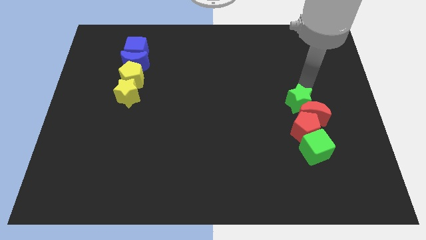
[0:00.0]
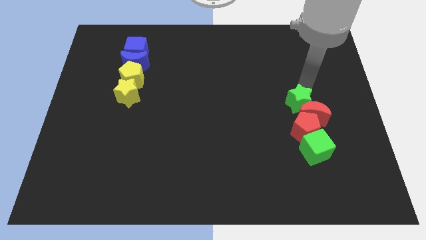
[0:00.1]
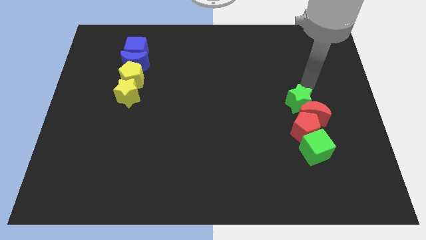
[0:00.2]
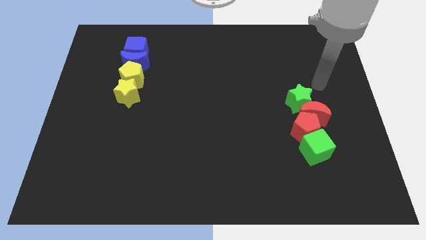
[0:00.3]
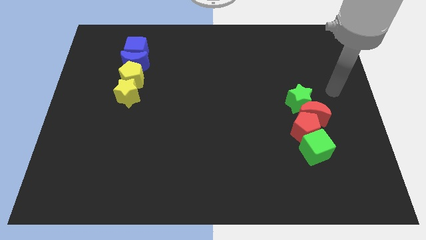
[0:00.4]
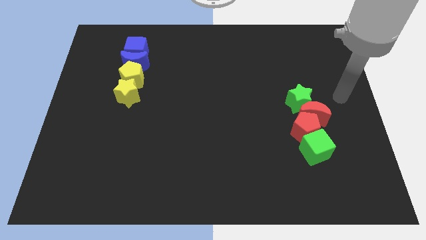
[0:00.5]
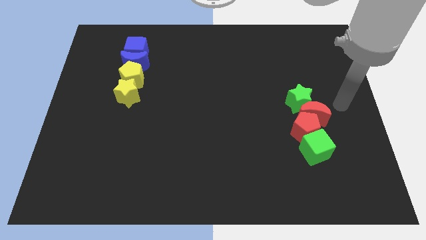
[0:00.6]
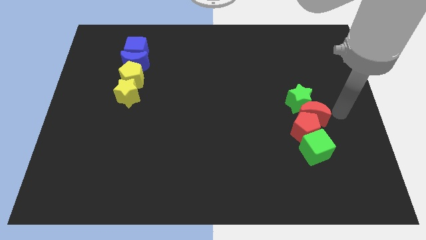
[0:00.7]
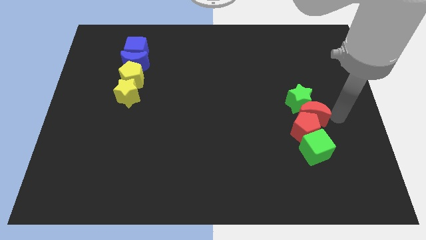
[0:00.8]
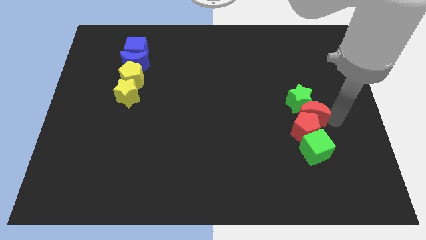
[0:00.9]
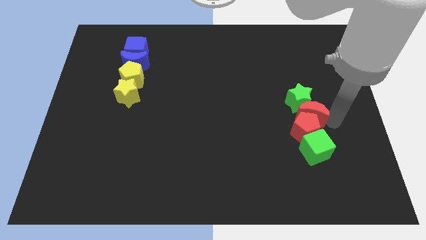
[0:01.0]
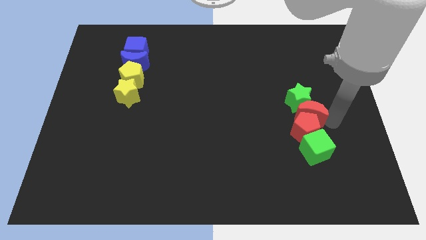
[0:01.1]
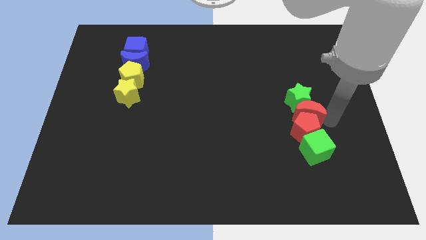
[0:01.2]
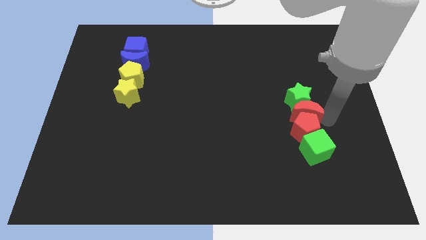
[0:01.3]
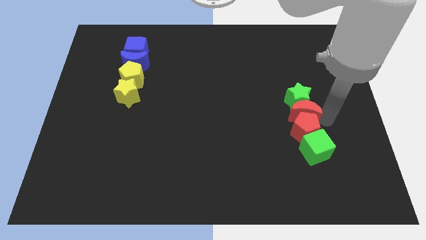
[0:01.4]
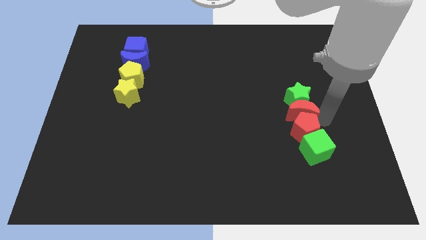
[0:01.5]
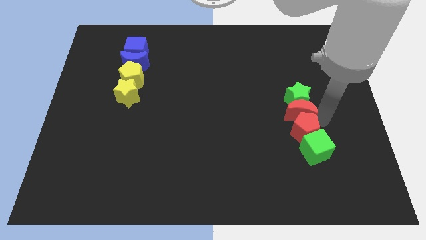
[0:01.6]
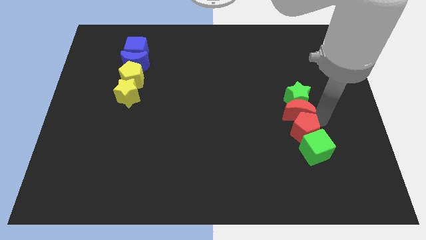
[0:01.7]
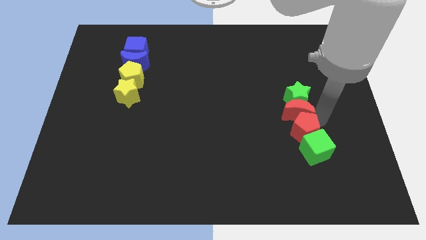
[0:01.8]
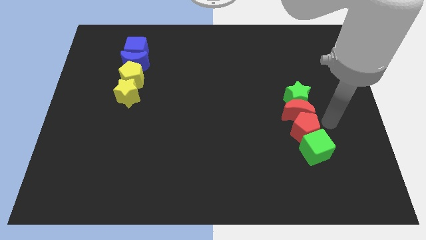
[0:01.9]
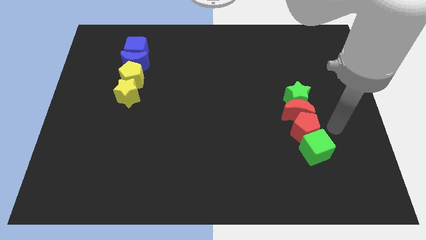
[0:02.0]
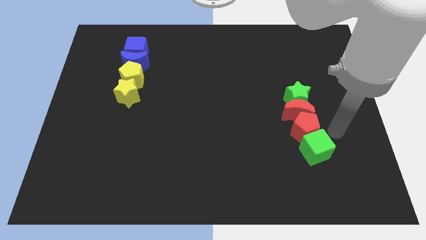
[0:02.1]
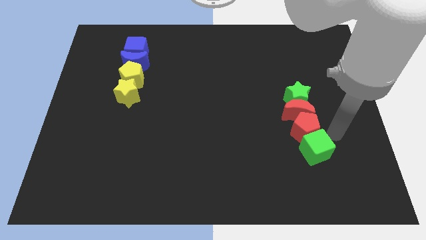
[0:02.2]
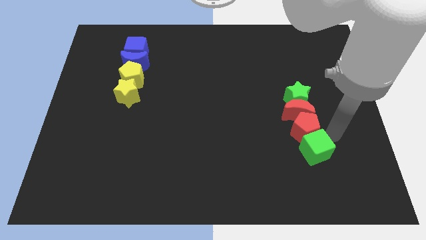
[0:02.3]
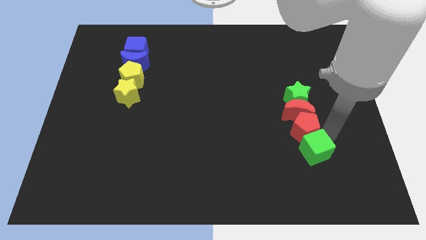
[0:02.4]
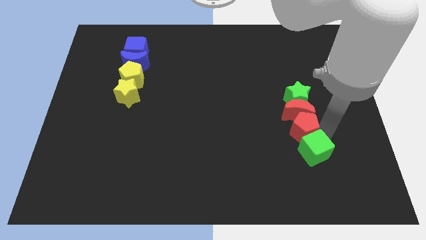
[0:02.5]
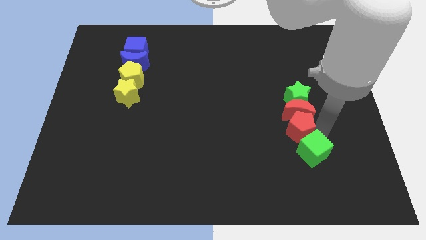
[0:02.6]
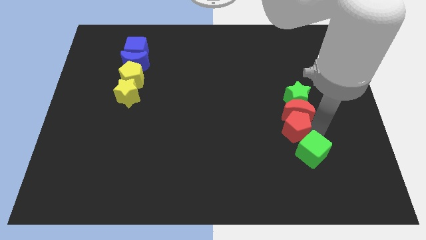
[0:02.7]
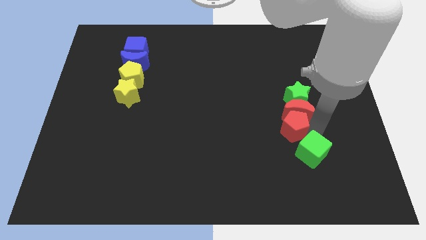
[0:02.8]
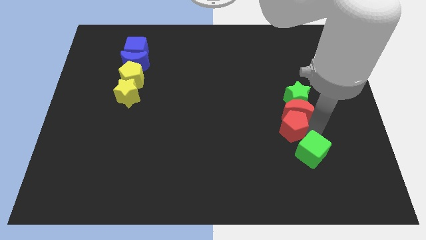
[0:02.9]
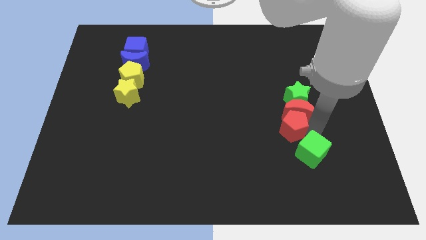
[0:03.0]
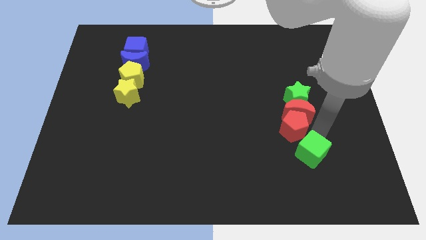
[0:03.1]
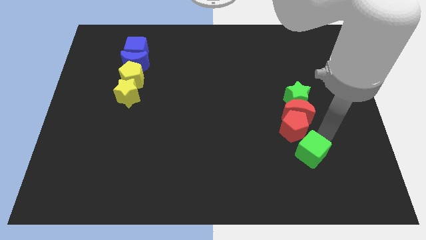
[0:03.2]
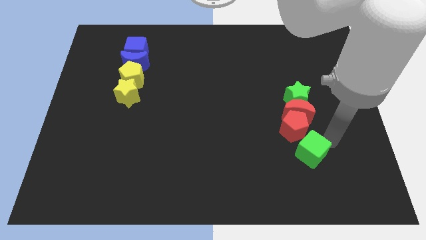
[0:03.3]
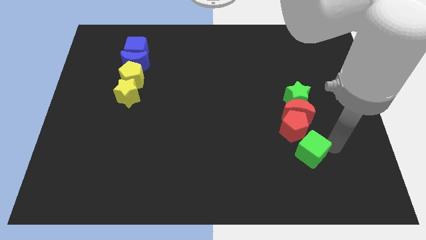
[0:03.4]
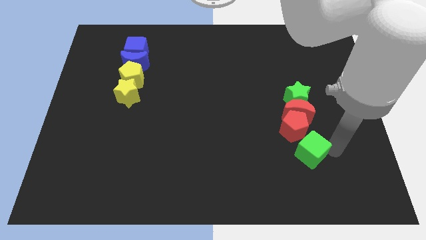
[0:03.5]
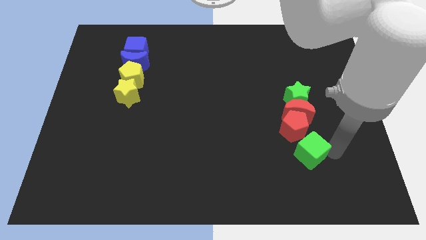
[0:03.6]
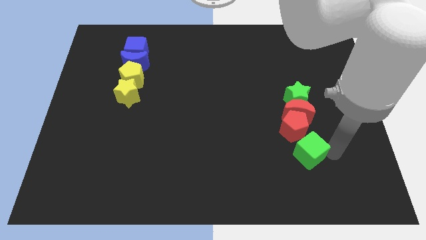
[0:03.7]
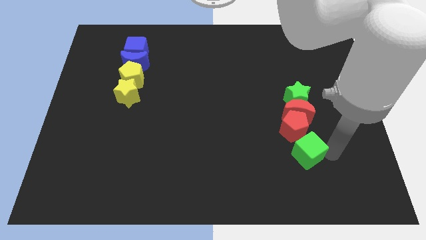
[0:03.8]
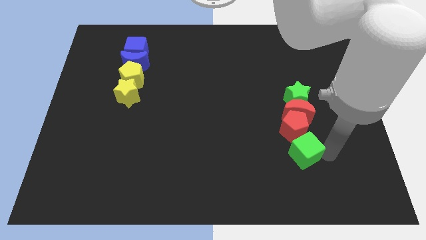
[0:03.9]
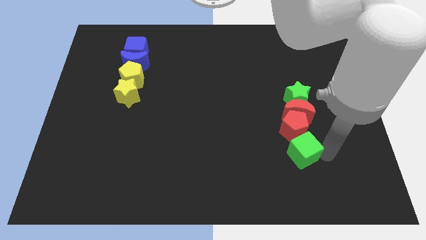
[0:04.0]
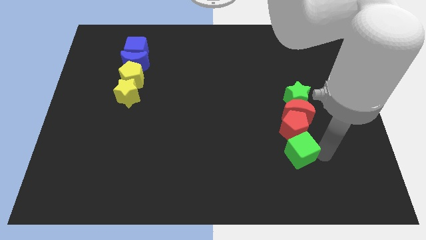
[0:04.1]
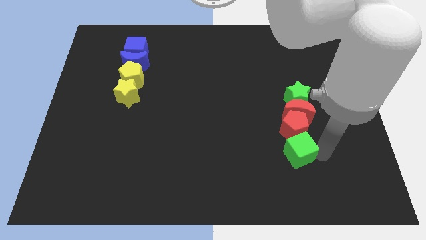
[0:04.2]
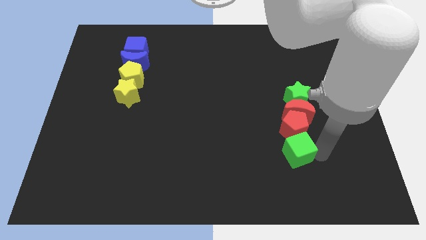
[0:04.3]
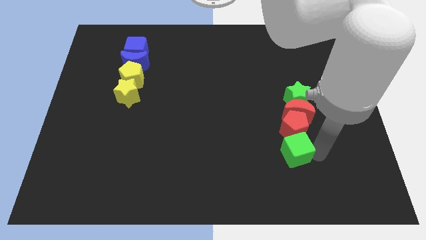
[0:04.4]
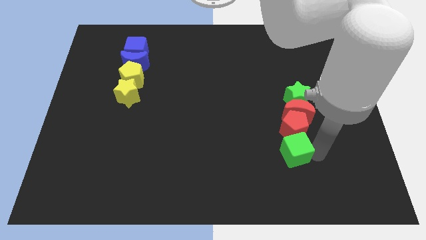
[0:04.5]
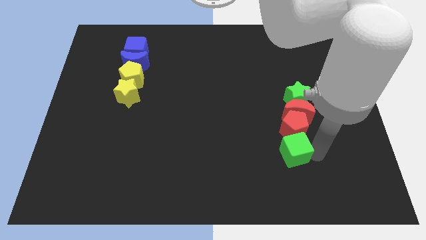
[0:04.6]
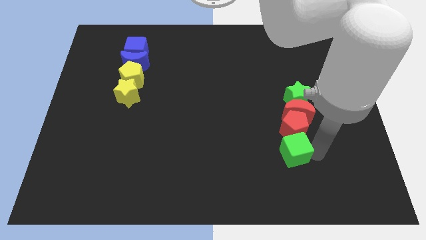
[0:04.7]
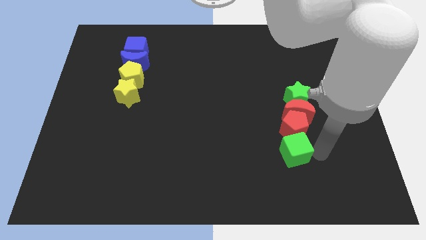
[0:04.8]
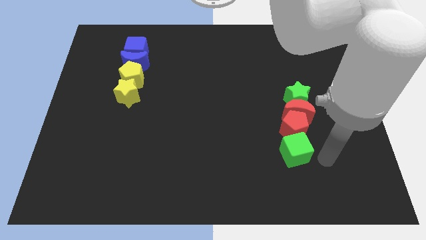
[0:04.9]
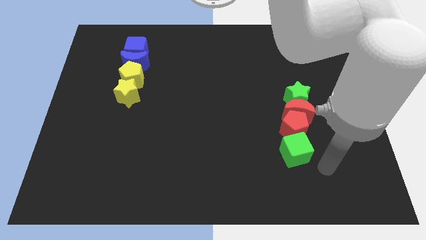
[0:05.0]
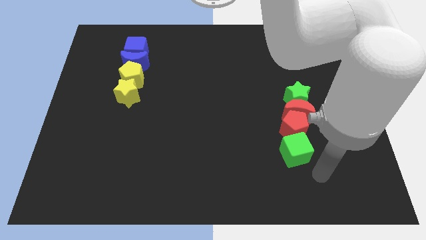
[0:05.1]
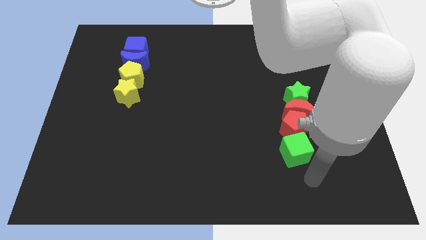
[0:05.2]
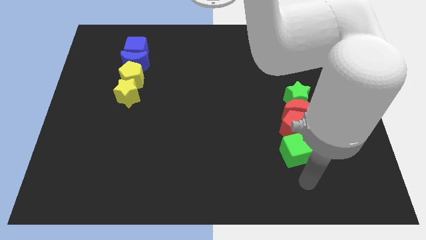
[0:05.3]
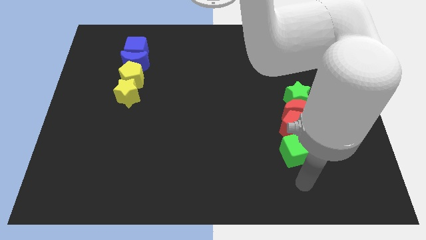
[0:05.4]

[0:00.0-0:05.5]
adjust the red and green blocks to form a vertical line

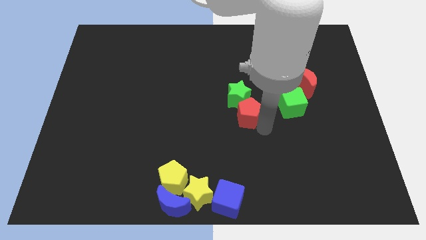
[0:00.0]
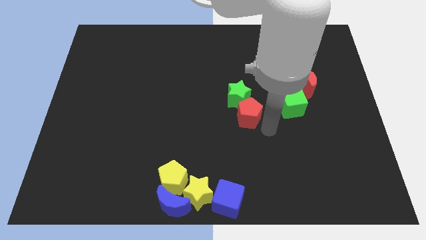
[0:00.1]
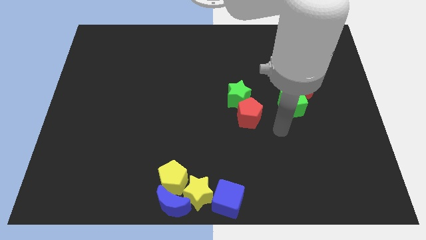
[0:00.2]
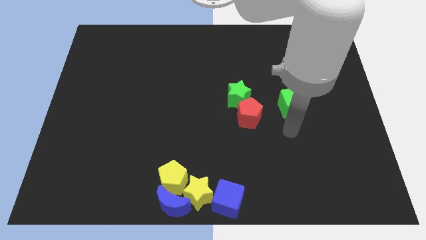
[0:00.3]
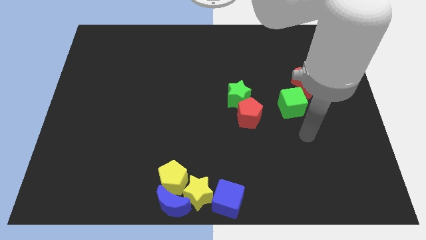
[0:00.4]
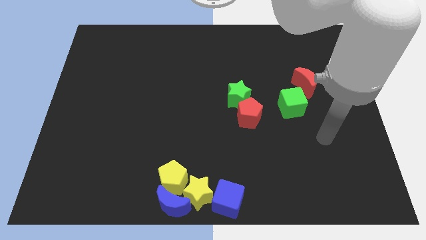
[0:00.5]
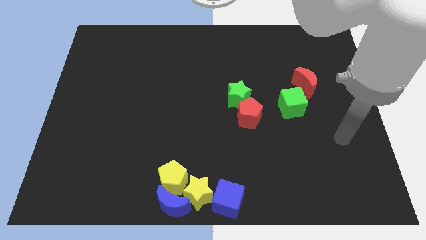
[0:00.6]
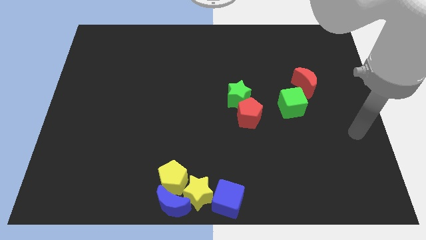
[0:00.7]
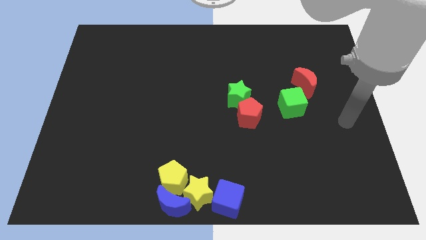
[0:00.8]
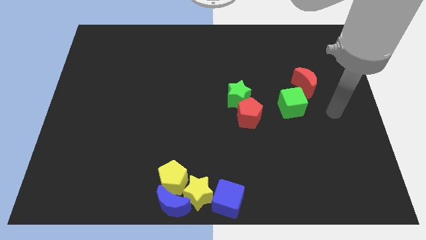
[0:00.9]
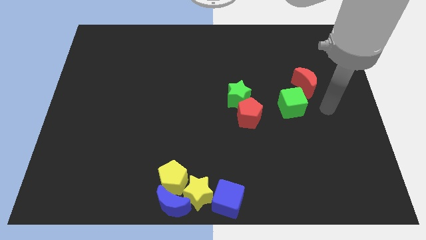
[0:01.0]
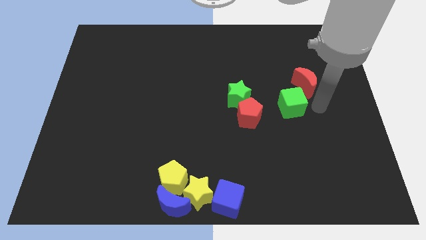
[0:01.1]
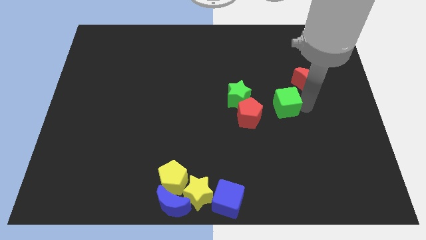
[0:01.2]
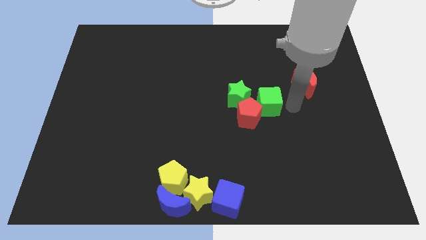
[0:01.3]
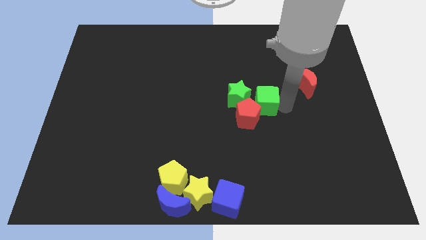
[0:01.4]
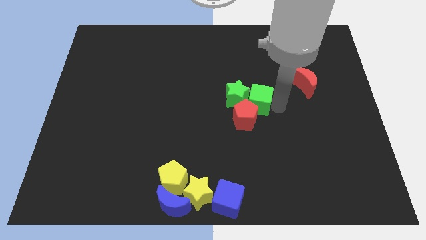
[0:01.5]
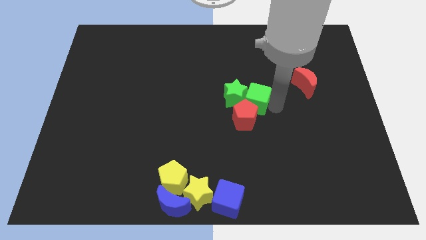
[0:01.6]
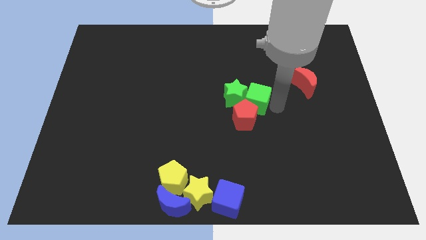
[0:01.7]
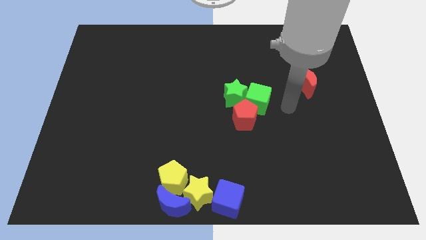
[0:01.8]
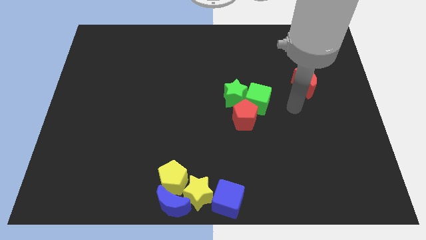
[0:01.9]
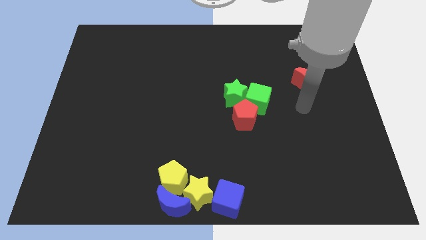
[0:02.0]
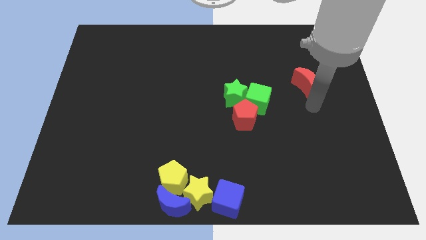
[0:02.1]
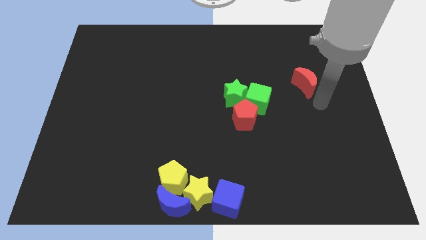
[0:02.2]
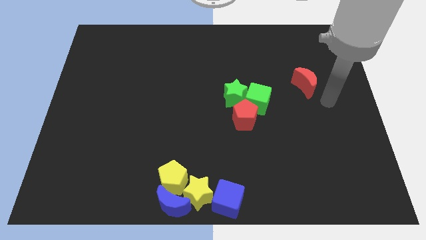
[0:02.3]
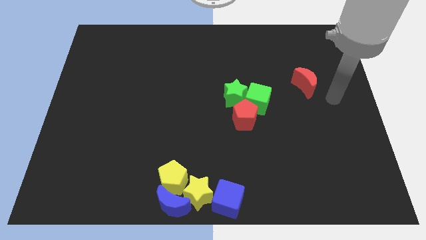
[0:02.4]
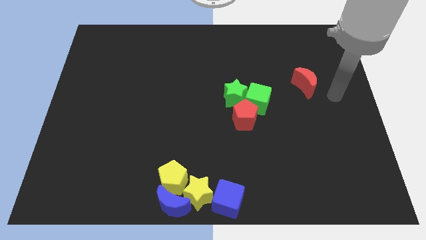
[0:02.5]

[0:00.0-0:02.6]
move the green cube to the right of the green star

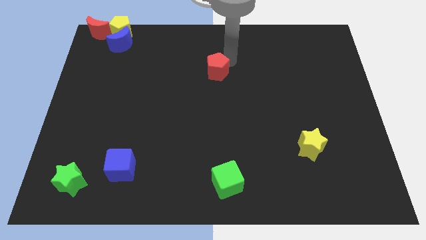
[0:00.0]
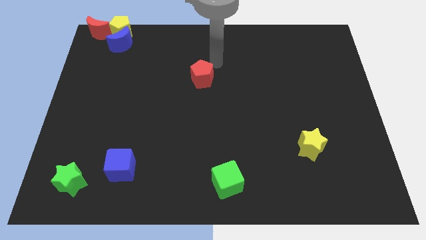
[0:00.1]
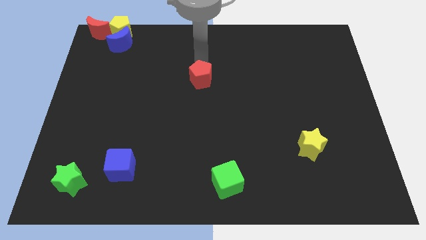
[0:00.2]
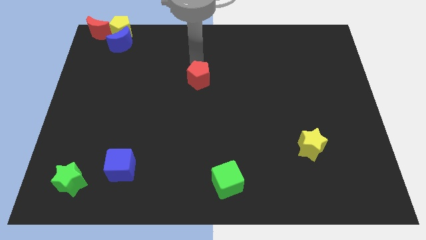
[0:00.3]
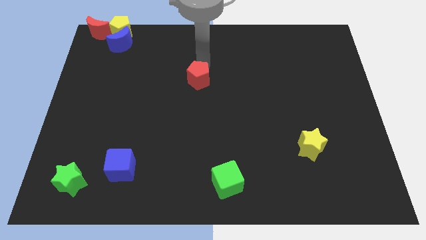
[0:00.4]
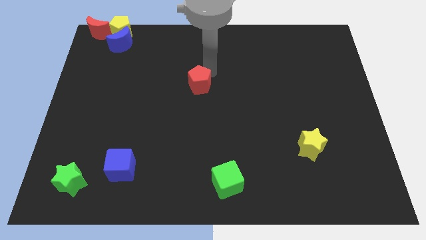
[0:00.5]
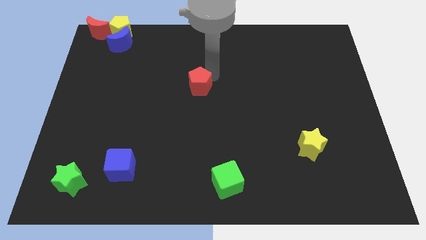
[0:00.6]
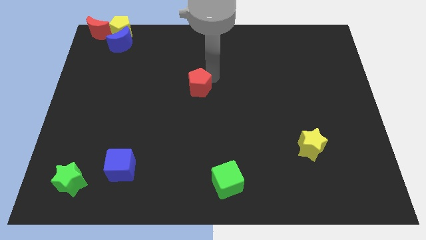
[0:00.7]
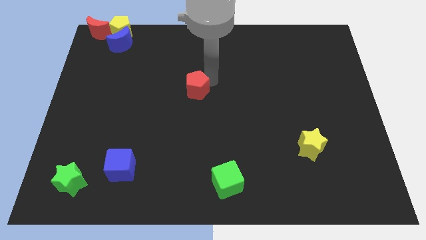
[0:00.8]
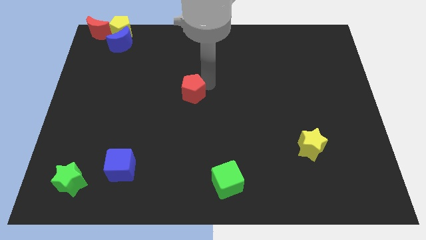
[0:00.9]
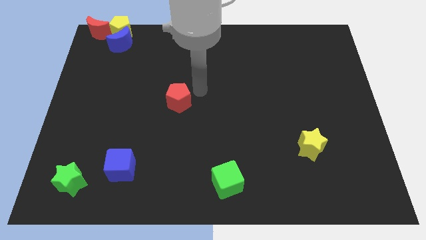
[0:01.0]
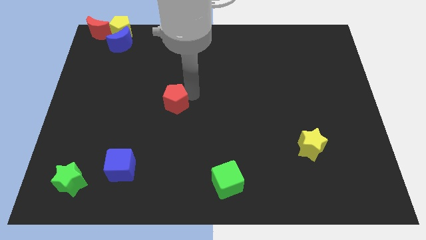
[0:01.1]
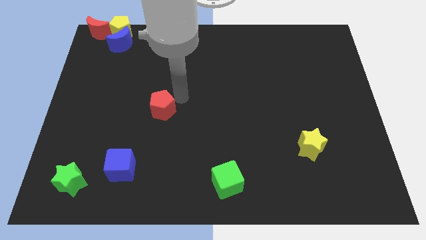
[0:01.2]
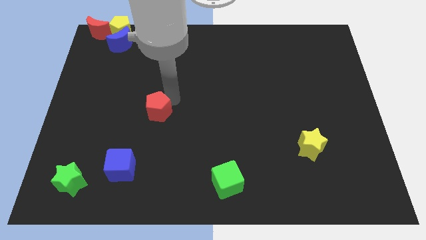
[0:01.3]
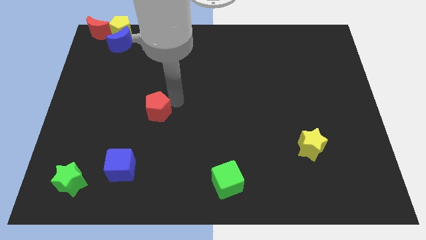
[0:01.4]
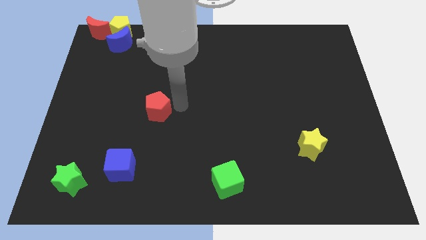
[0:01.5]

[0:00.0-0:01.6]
drag the red pentagon slightly downwards
